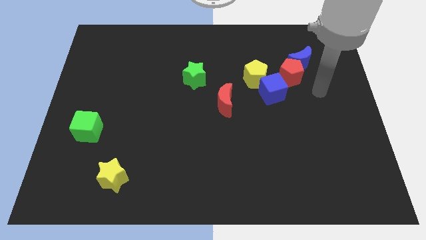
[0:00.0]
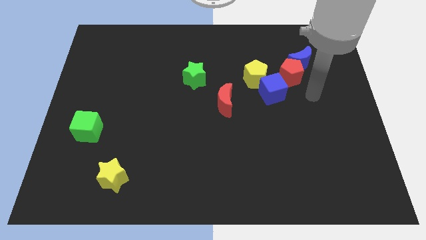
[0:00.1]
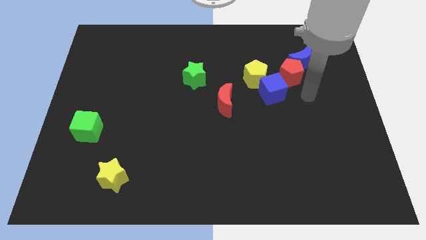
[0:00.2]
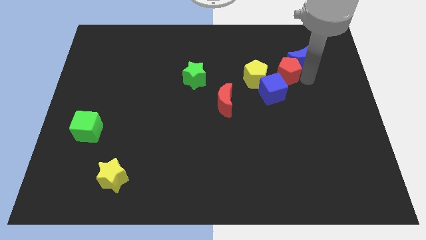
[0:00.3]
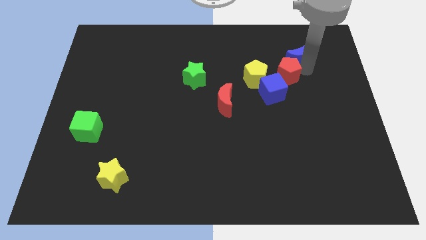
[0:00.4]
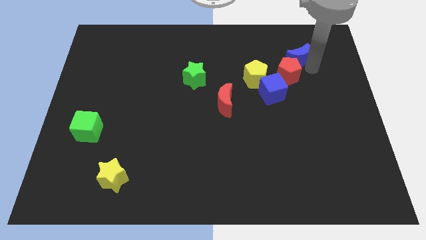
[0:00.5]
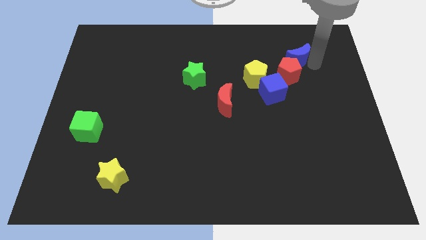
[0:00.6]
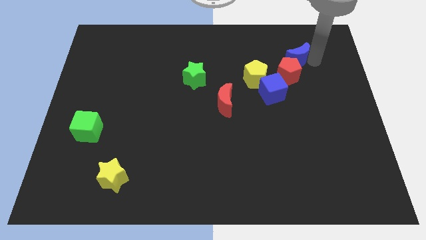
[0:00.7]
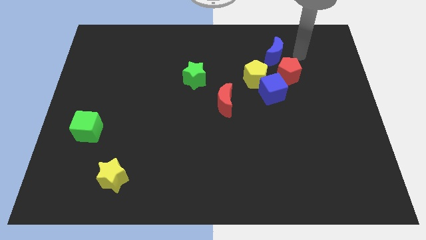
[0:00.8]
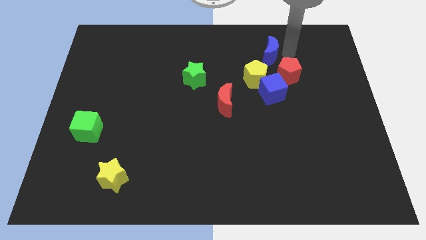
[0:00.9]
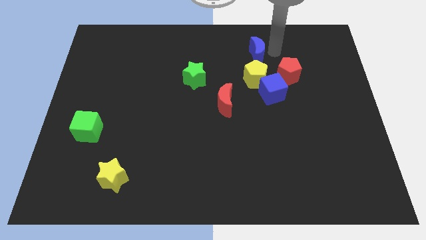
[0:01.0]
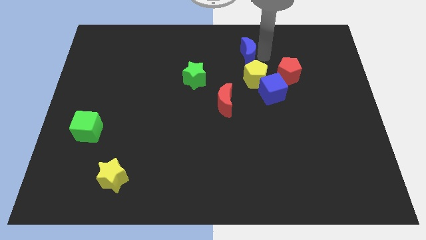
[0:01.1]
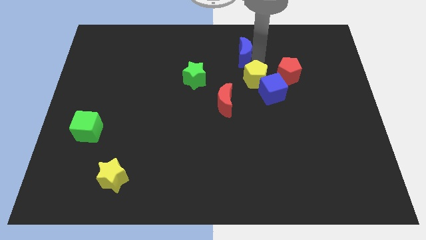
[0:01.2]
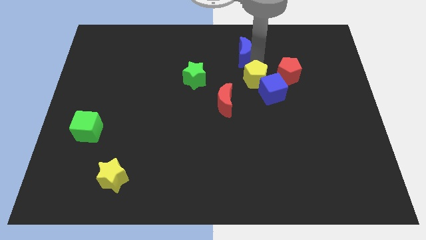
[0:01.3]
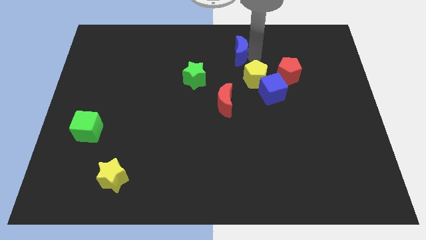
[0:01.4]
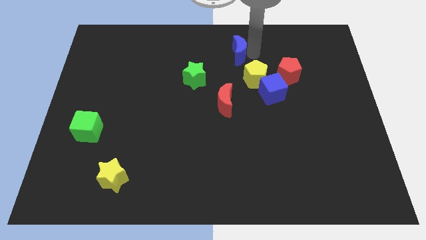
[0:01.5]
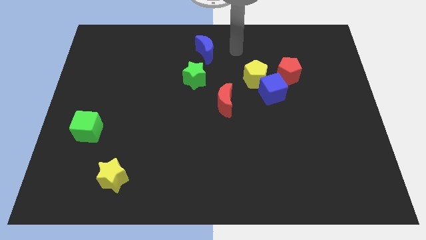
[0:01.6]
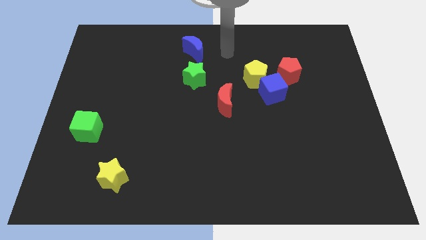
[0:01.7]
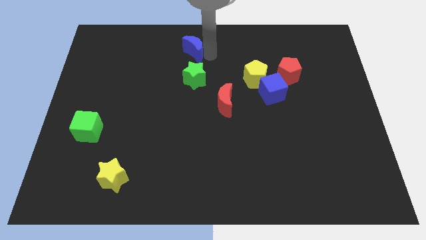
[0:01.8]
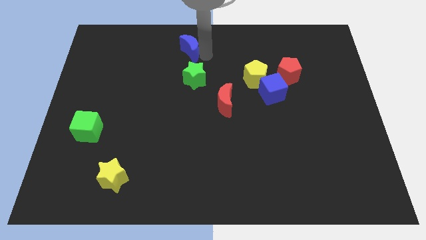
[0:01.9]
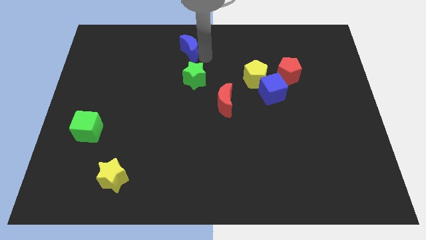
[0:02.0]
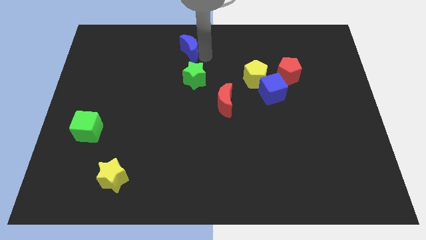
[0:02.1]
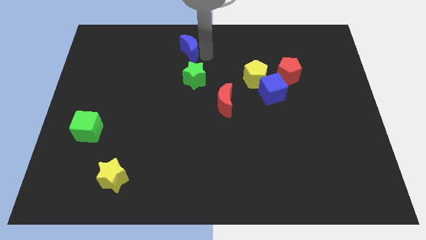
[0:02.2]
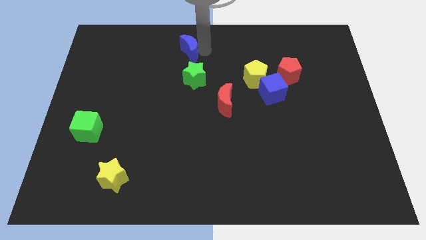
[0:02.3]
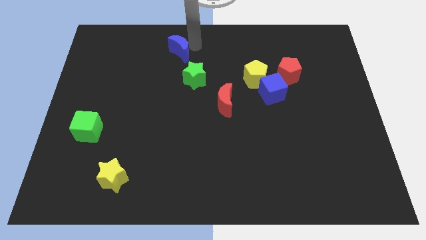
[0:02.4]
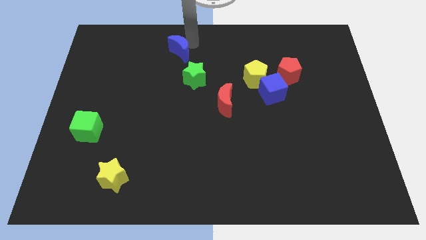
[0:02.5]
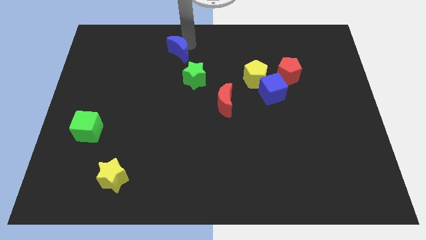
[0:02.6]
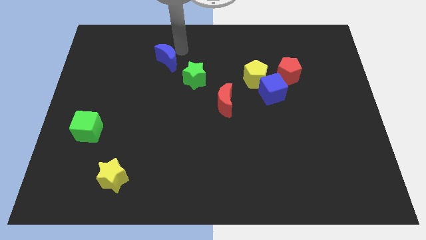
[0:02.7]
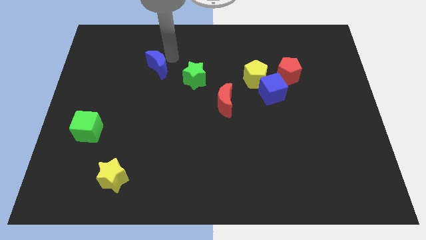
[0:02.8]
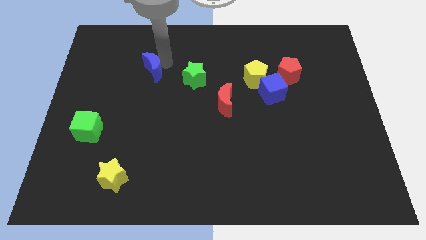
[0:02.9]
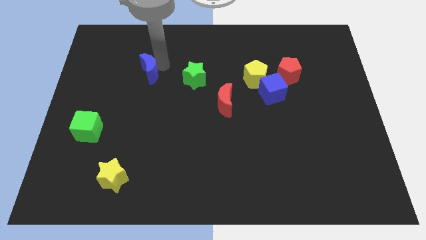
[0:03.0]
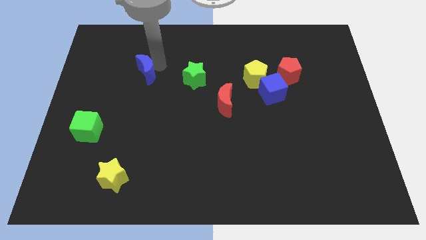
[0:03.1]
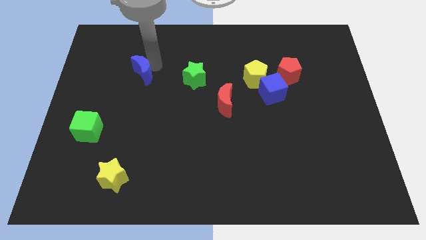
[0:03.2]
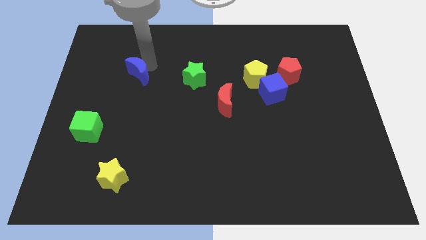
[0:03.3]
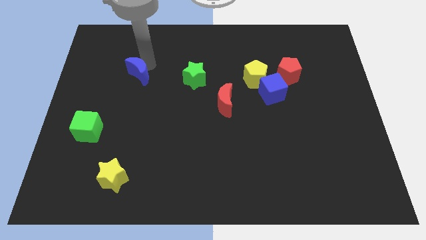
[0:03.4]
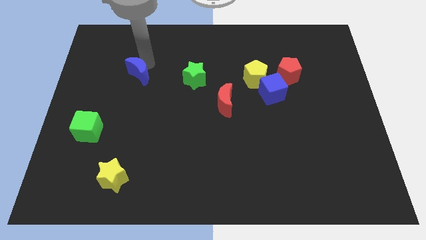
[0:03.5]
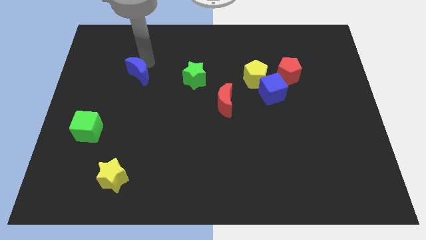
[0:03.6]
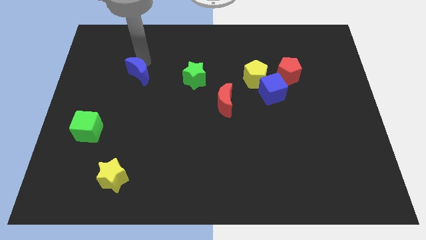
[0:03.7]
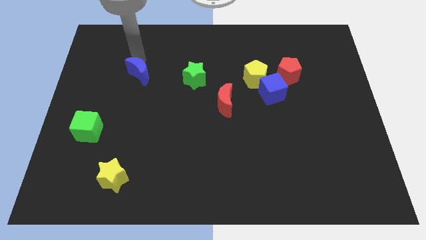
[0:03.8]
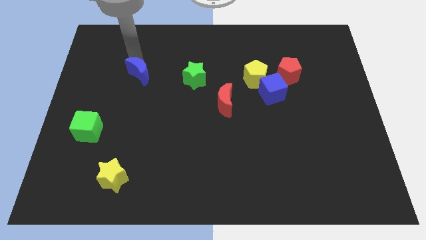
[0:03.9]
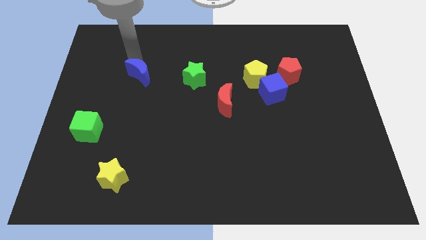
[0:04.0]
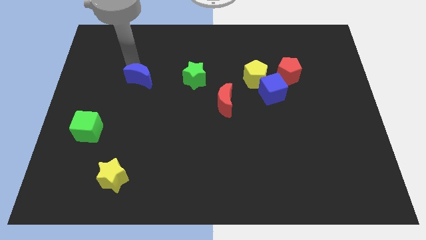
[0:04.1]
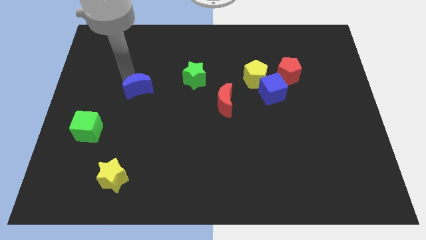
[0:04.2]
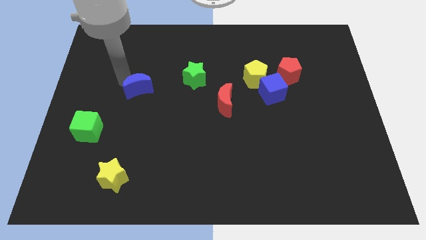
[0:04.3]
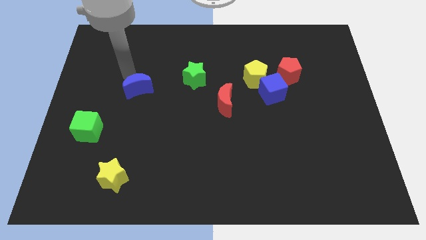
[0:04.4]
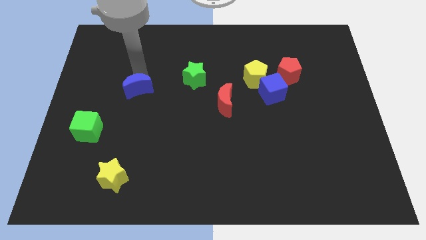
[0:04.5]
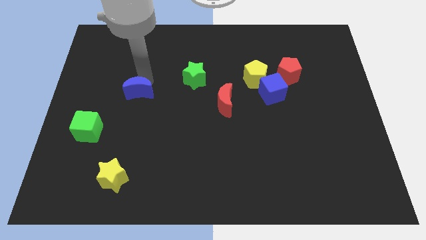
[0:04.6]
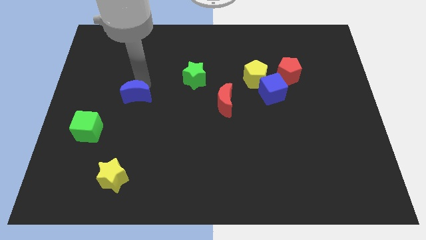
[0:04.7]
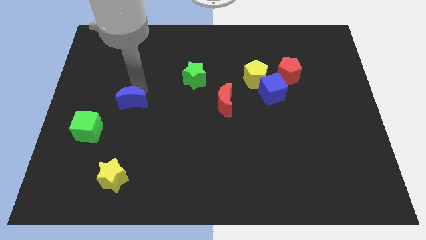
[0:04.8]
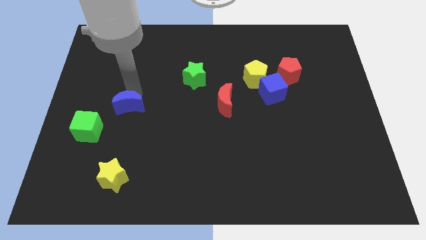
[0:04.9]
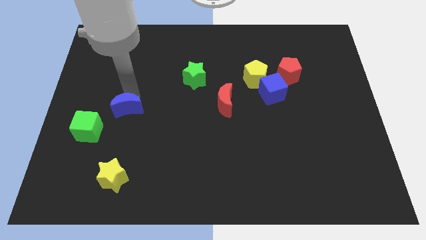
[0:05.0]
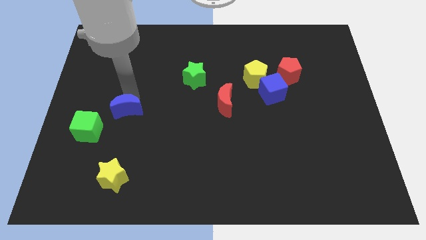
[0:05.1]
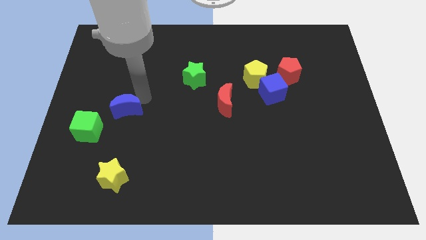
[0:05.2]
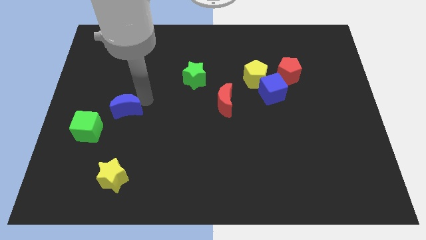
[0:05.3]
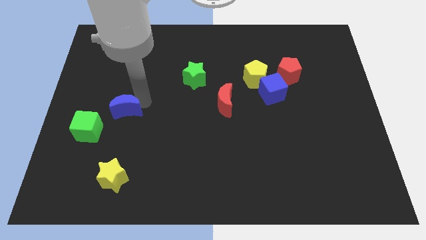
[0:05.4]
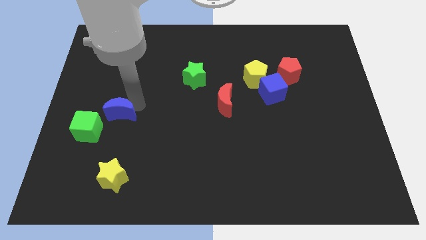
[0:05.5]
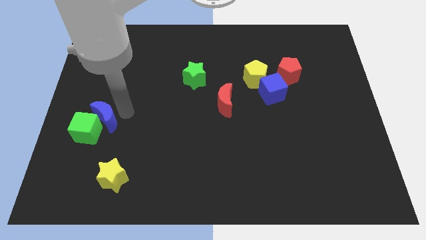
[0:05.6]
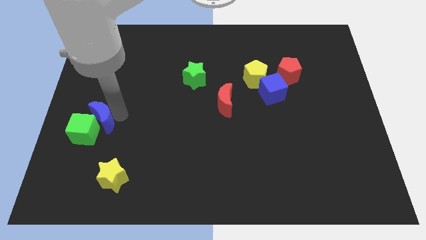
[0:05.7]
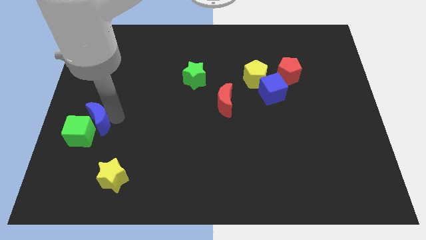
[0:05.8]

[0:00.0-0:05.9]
push the blue moon towards the green cube

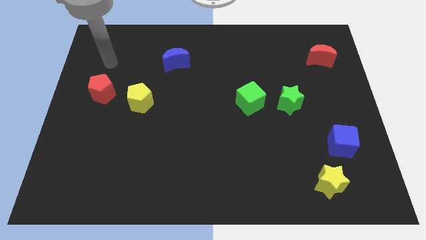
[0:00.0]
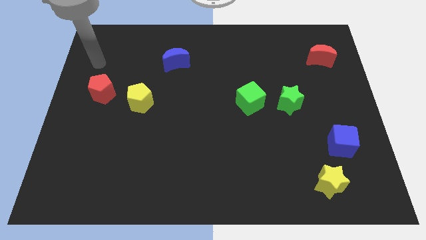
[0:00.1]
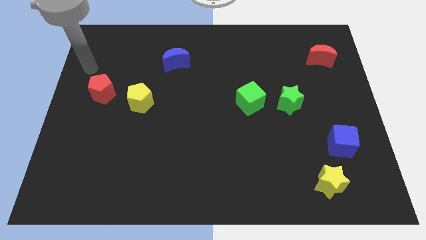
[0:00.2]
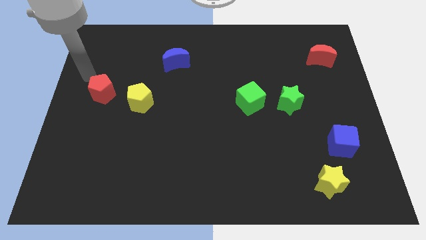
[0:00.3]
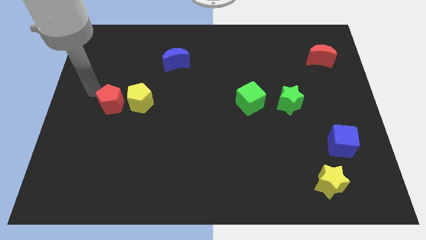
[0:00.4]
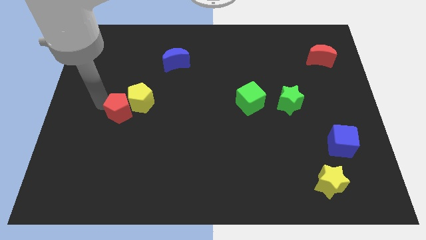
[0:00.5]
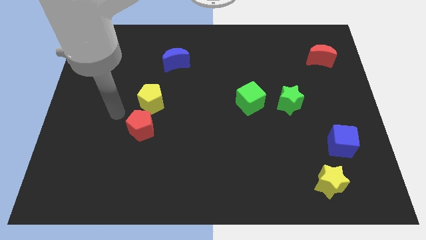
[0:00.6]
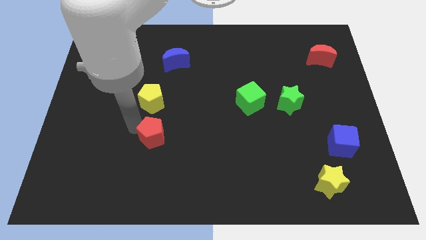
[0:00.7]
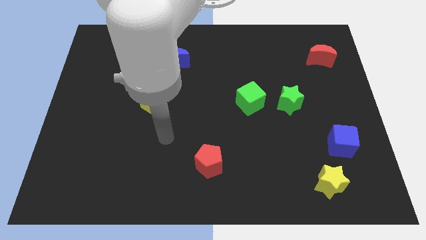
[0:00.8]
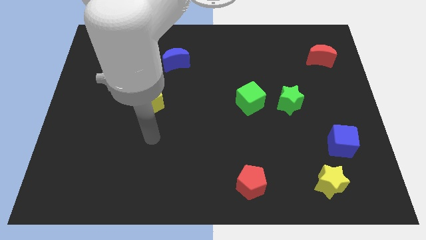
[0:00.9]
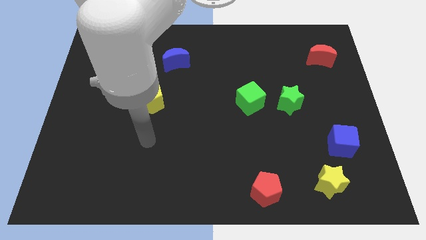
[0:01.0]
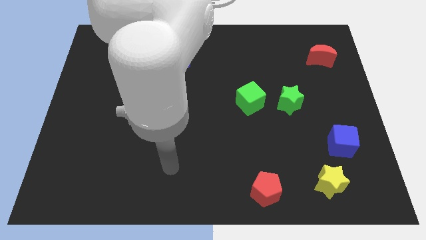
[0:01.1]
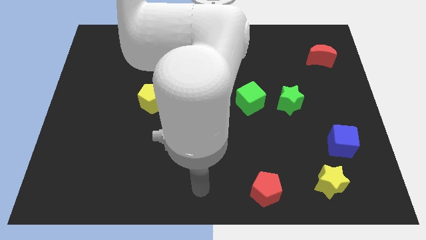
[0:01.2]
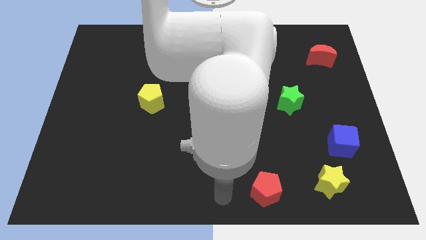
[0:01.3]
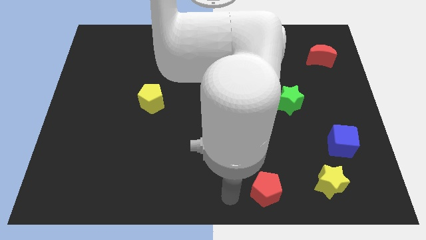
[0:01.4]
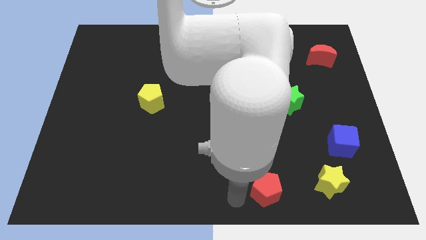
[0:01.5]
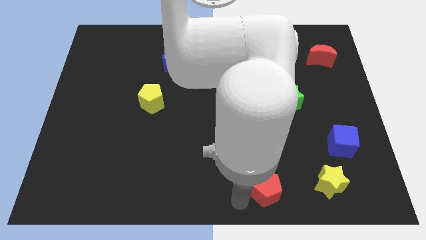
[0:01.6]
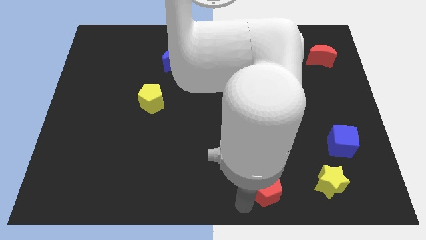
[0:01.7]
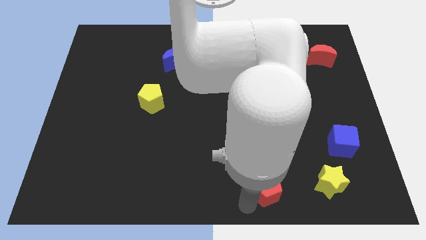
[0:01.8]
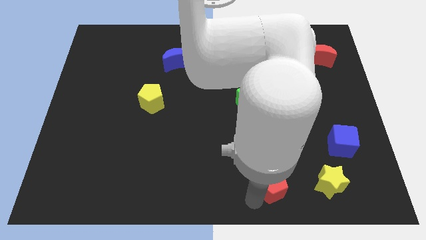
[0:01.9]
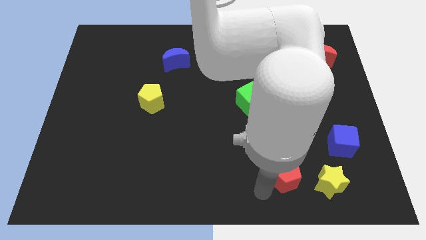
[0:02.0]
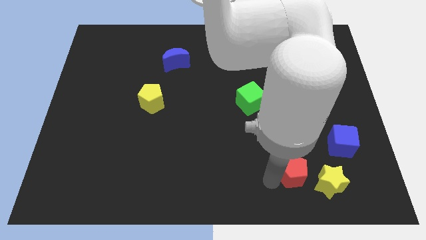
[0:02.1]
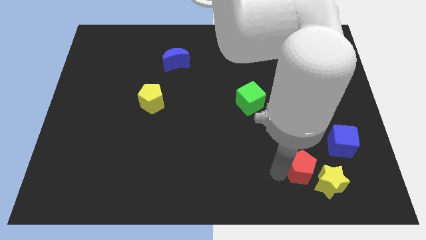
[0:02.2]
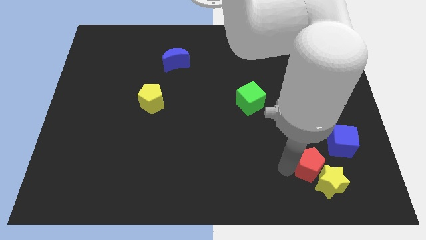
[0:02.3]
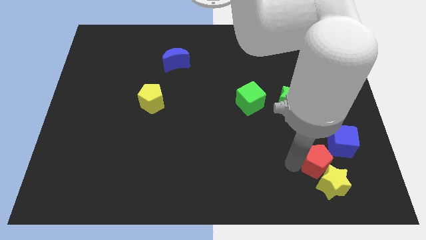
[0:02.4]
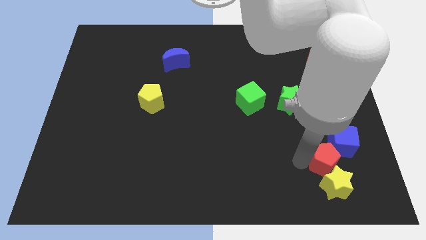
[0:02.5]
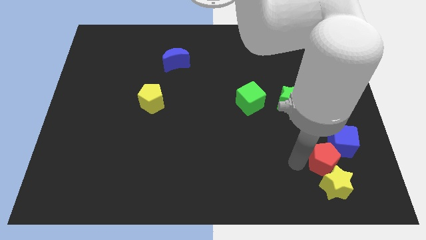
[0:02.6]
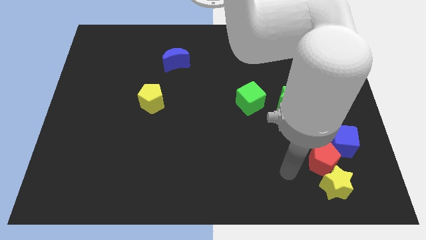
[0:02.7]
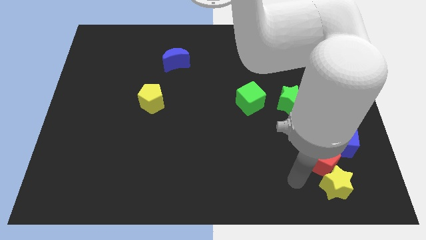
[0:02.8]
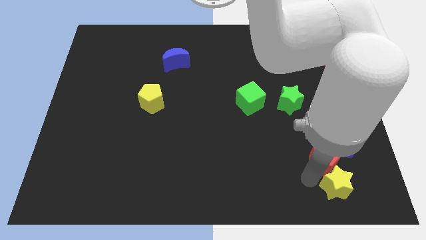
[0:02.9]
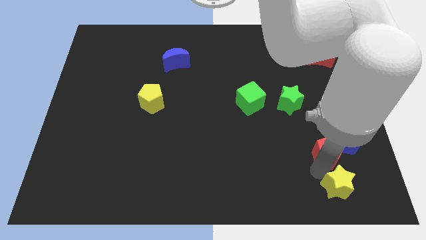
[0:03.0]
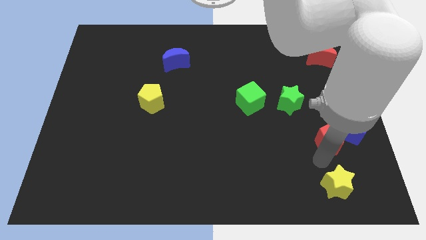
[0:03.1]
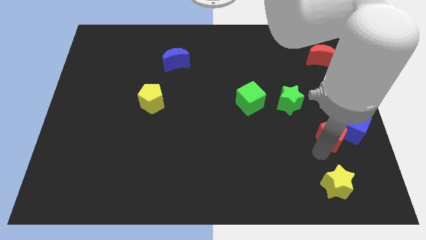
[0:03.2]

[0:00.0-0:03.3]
put the red pentagon next to the blue cube
